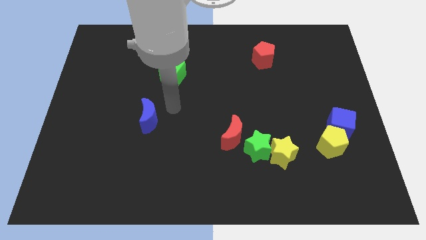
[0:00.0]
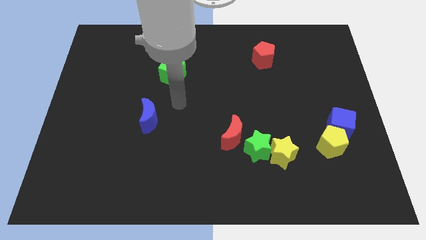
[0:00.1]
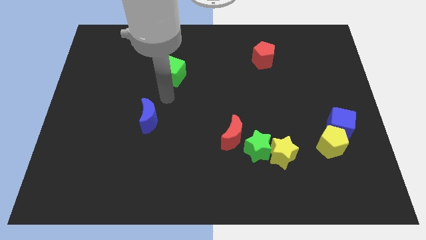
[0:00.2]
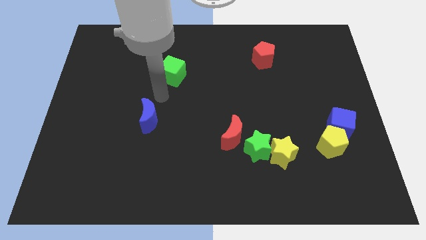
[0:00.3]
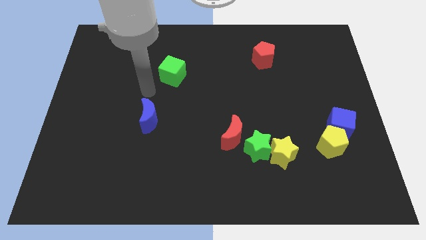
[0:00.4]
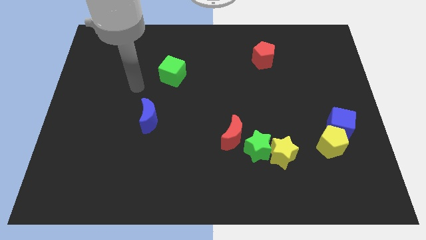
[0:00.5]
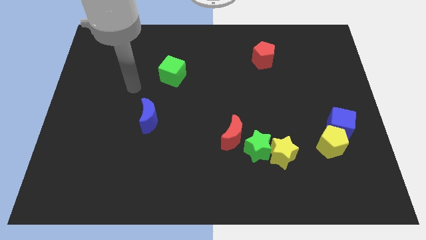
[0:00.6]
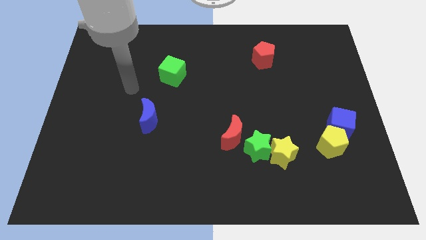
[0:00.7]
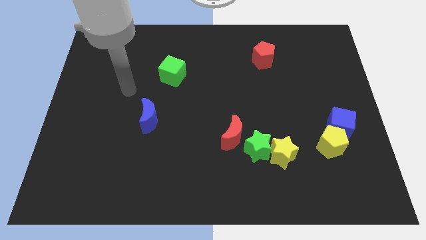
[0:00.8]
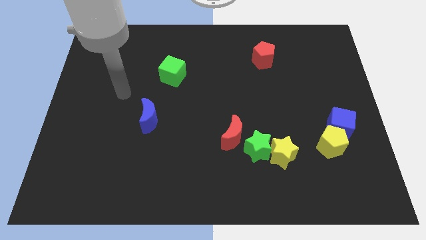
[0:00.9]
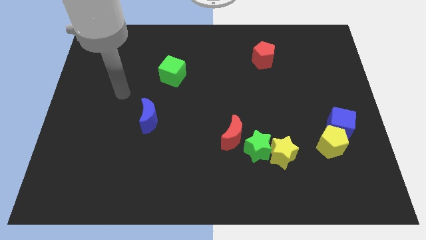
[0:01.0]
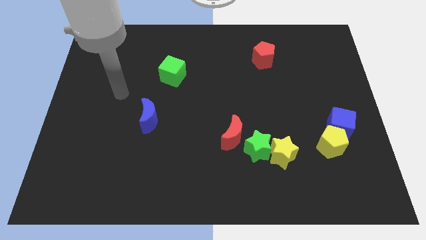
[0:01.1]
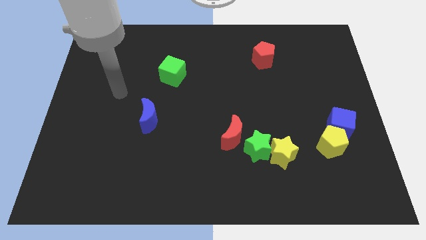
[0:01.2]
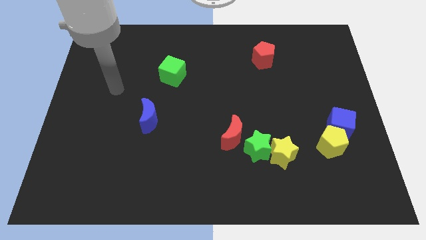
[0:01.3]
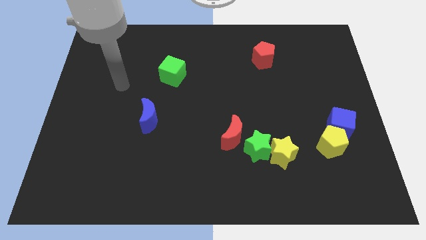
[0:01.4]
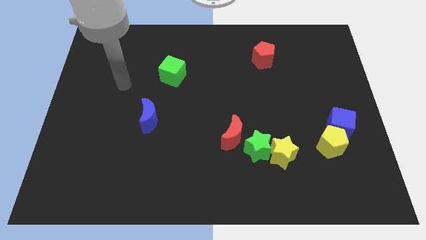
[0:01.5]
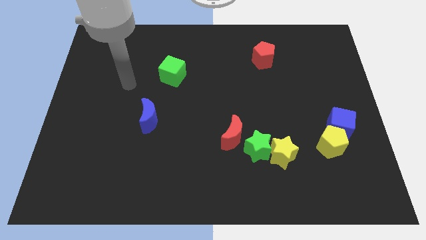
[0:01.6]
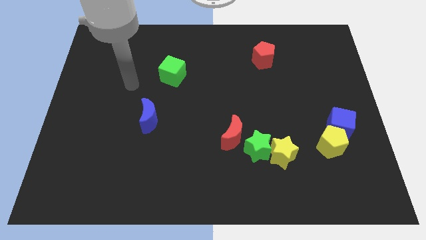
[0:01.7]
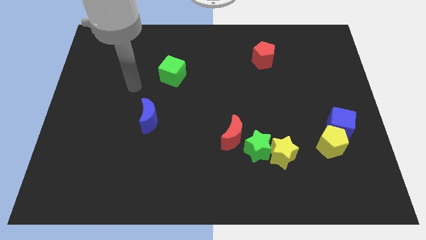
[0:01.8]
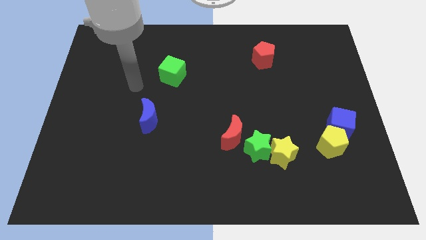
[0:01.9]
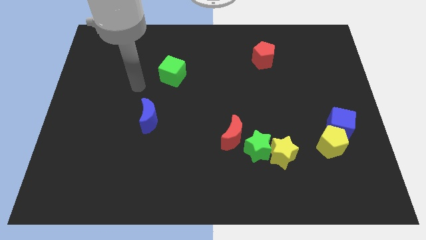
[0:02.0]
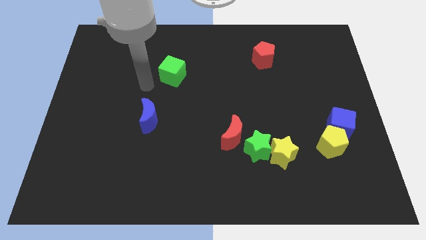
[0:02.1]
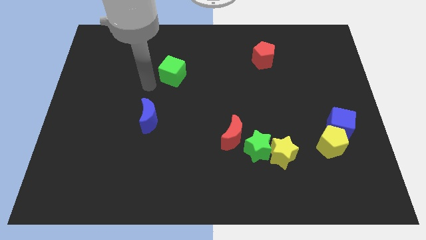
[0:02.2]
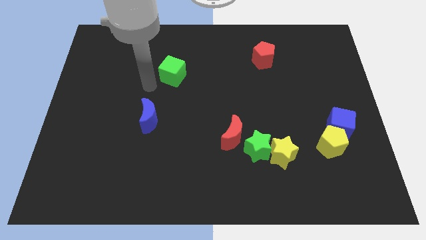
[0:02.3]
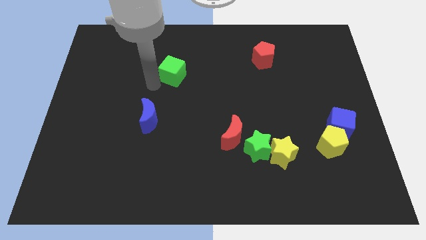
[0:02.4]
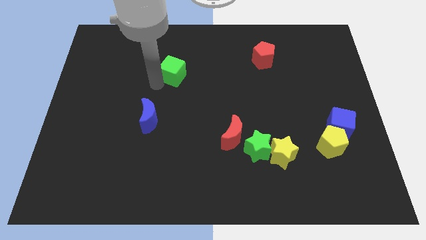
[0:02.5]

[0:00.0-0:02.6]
place your arm at the left of the green cube

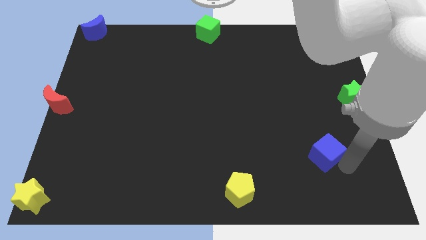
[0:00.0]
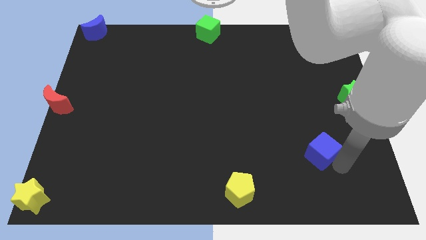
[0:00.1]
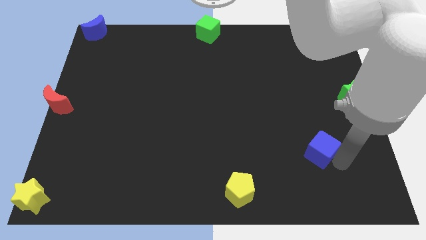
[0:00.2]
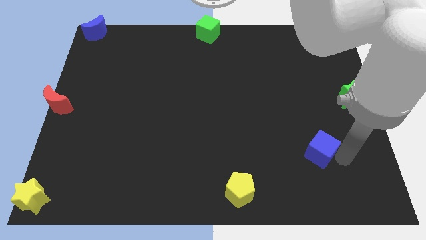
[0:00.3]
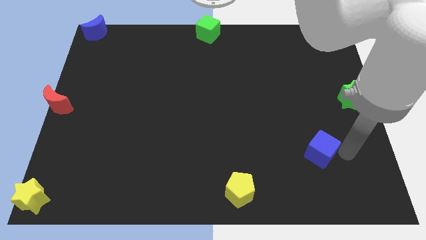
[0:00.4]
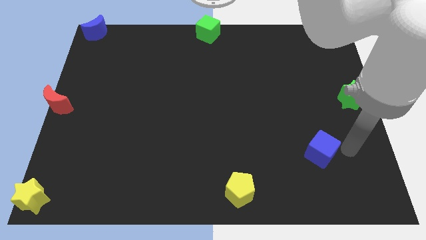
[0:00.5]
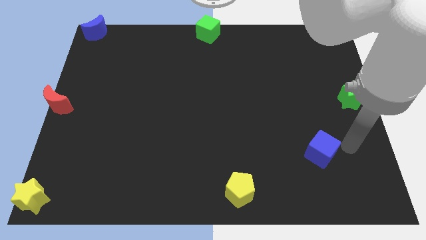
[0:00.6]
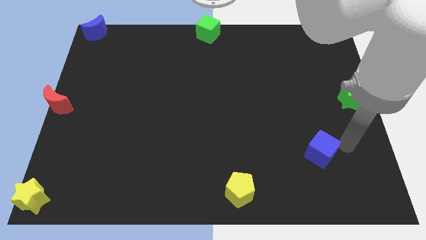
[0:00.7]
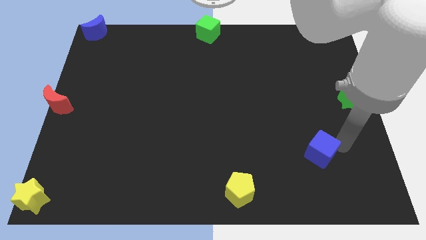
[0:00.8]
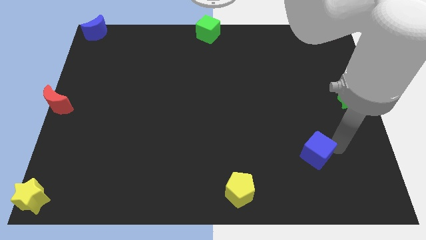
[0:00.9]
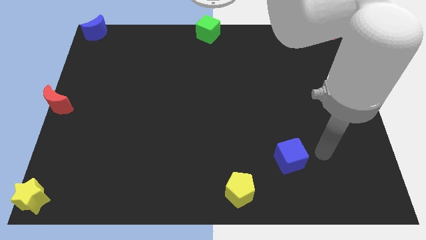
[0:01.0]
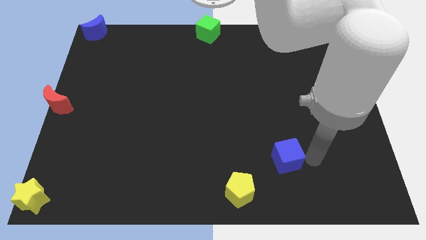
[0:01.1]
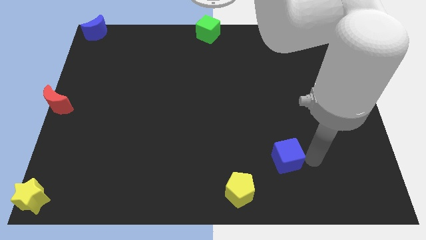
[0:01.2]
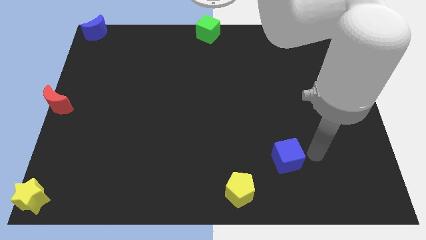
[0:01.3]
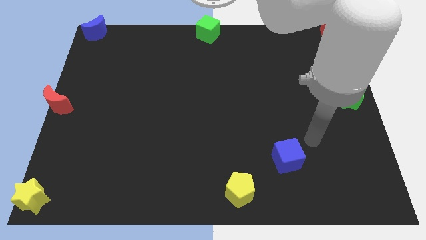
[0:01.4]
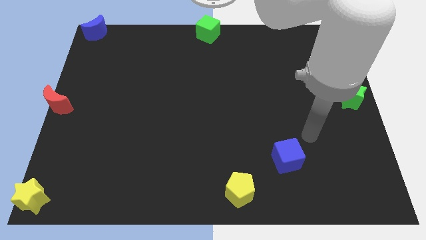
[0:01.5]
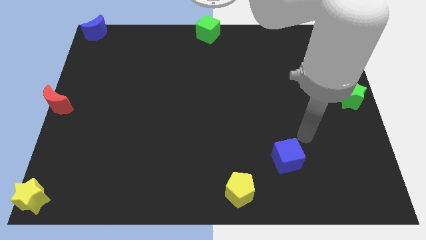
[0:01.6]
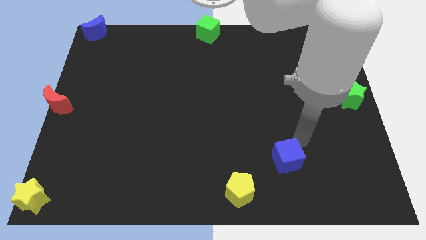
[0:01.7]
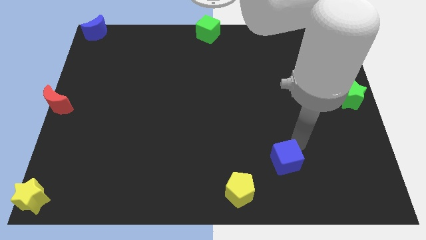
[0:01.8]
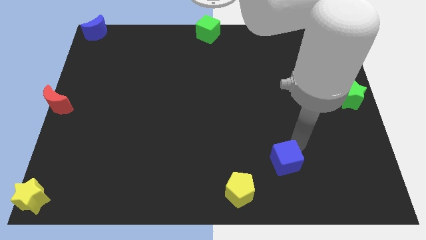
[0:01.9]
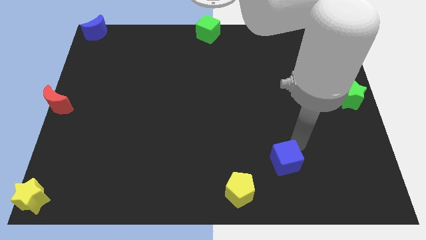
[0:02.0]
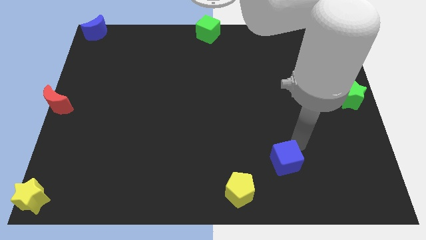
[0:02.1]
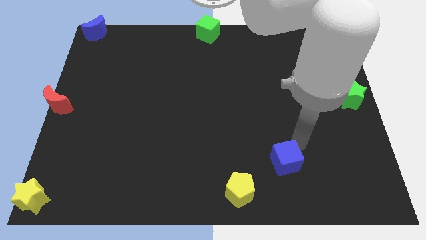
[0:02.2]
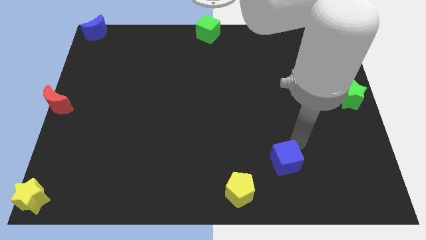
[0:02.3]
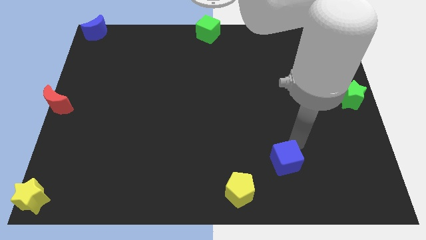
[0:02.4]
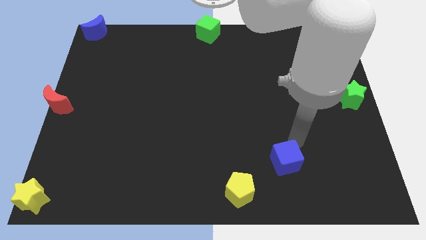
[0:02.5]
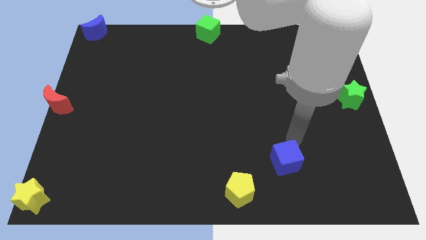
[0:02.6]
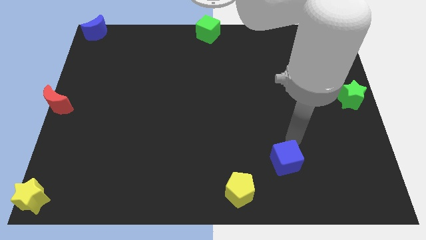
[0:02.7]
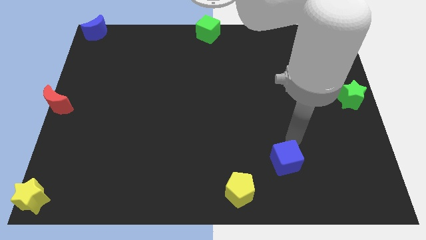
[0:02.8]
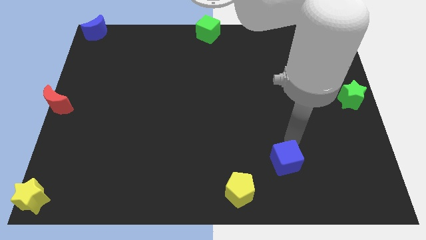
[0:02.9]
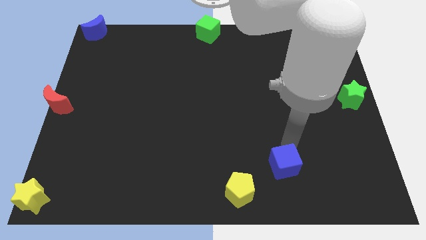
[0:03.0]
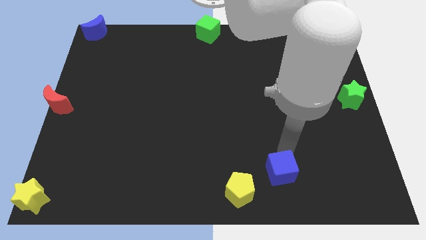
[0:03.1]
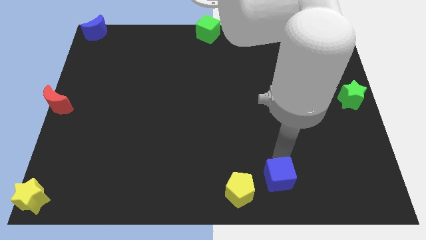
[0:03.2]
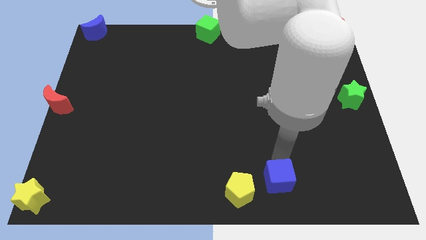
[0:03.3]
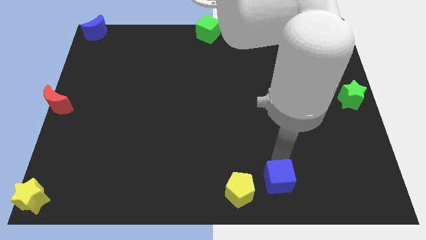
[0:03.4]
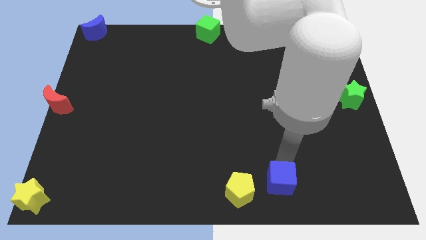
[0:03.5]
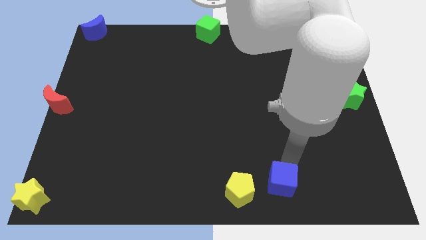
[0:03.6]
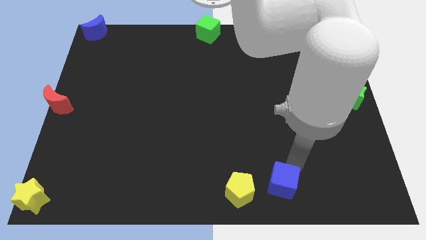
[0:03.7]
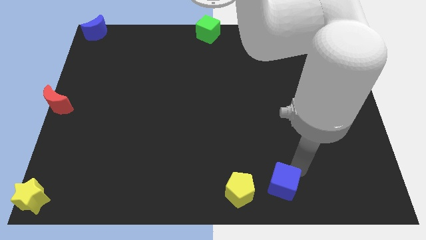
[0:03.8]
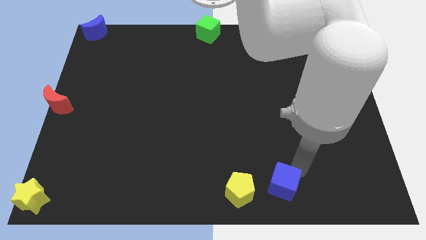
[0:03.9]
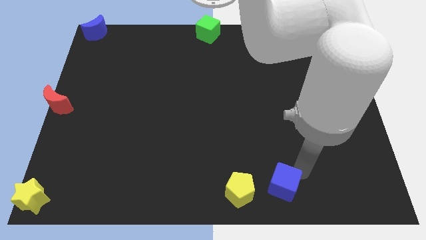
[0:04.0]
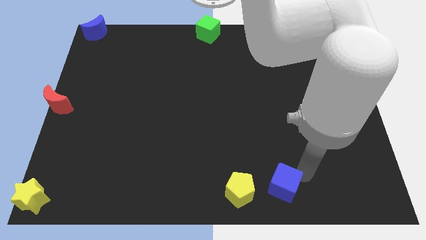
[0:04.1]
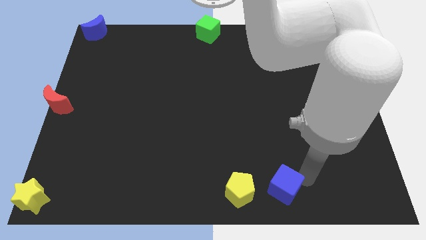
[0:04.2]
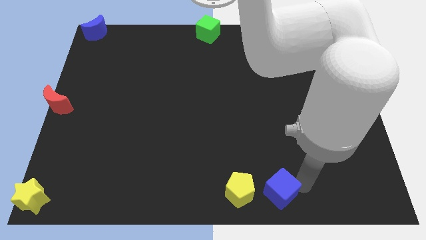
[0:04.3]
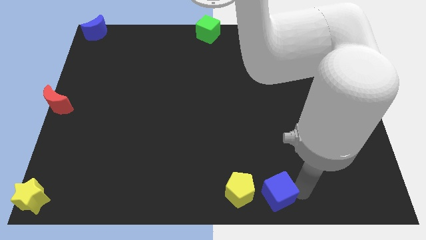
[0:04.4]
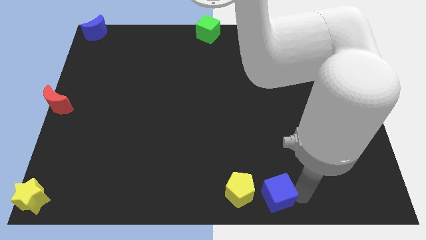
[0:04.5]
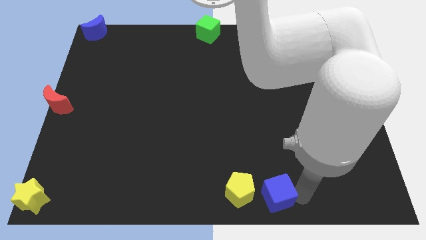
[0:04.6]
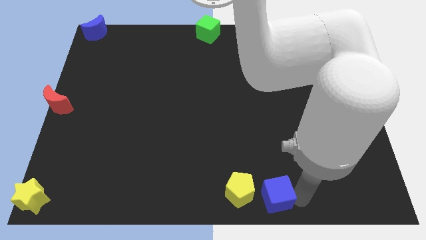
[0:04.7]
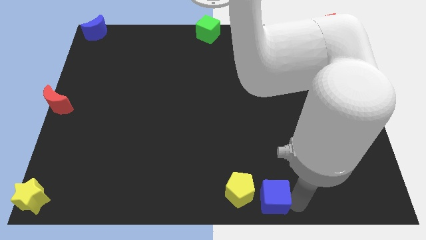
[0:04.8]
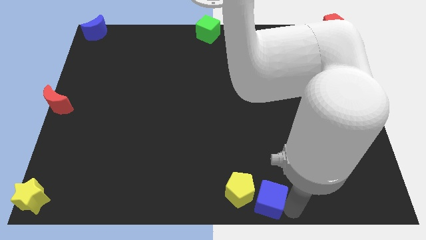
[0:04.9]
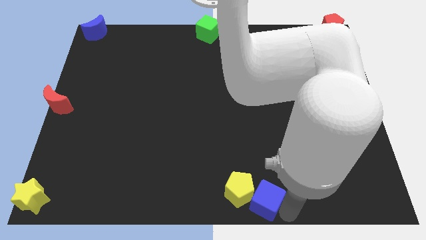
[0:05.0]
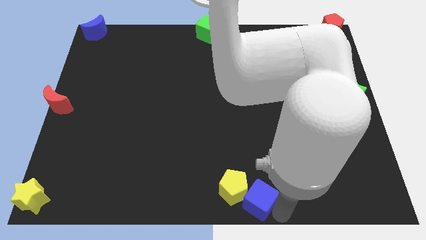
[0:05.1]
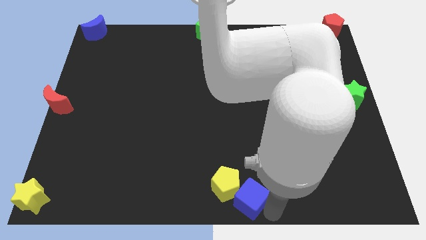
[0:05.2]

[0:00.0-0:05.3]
move the blue cube into the yellow pentagon

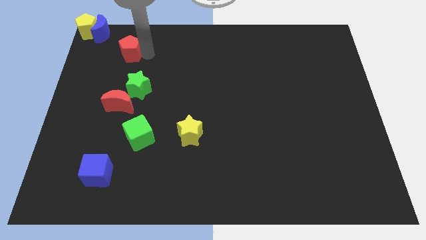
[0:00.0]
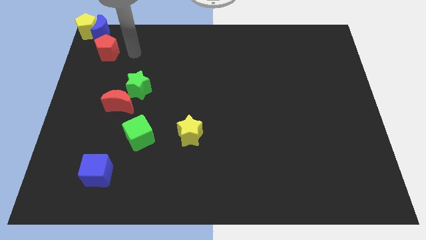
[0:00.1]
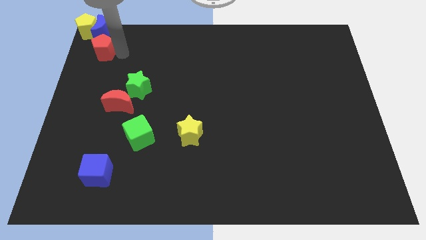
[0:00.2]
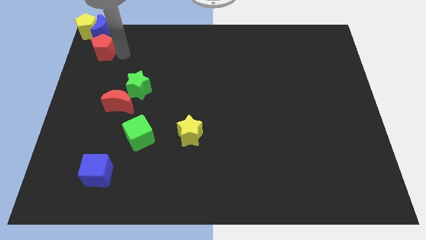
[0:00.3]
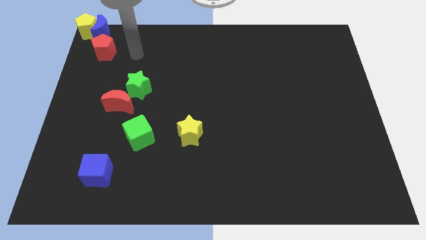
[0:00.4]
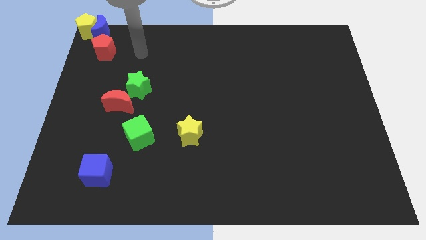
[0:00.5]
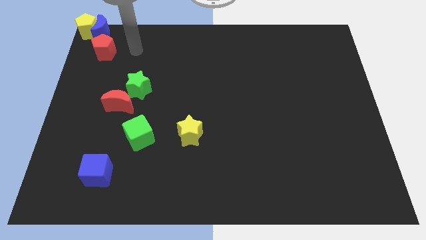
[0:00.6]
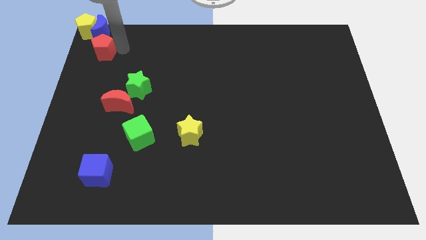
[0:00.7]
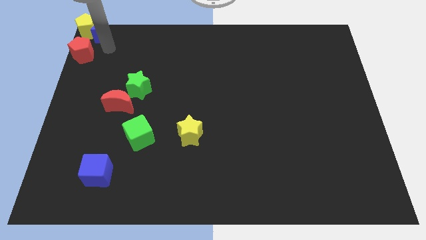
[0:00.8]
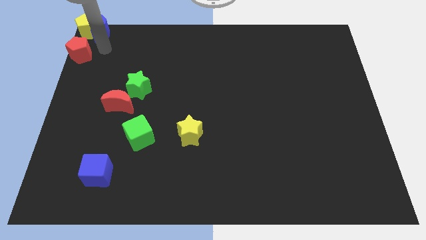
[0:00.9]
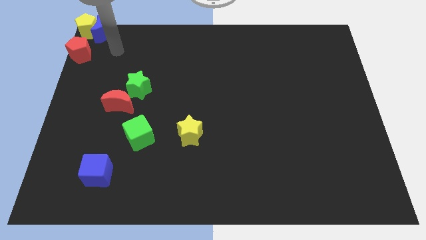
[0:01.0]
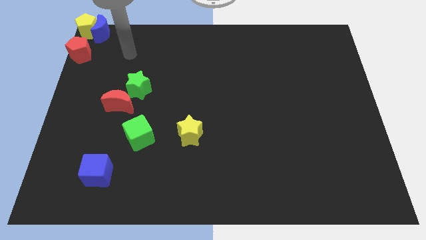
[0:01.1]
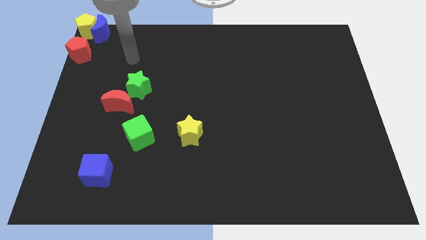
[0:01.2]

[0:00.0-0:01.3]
put the red pentagon at the bottom of yellow pentagon
